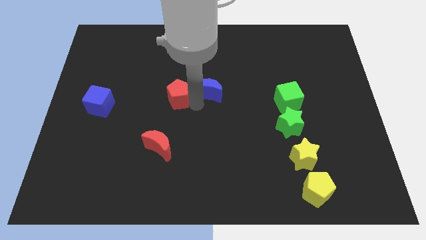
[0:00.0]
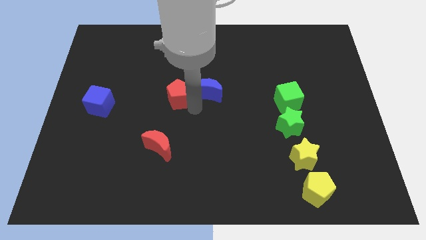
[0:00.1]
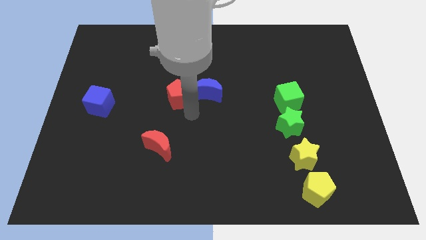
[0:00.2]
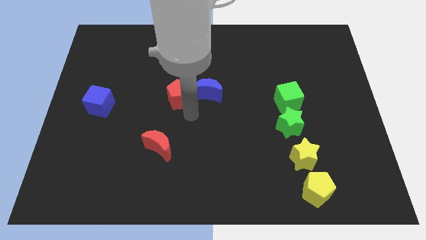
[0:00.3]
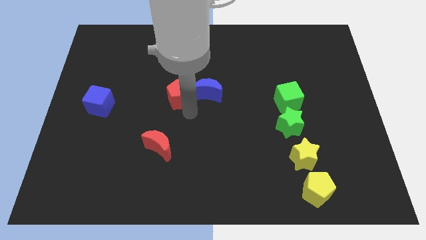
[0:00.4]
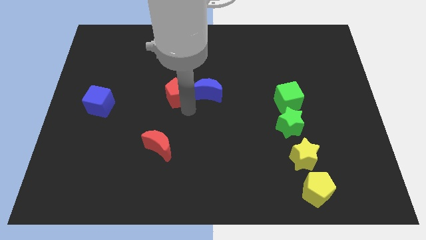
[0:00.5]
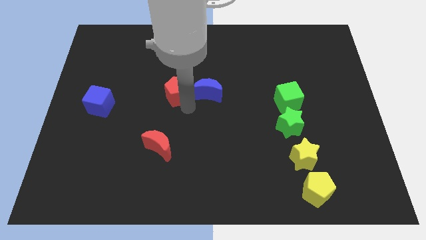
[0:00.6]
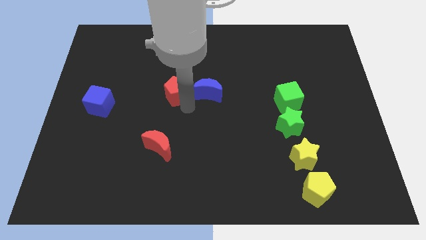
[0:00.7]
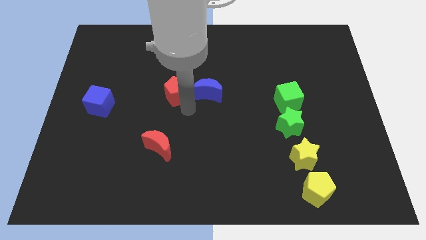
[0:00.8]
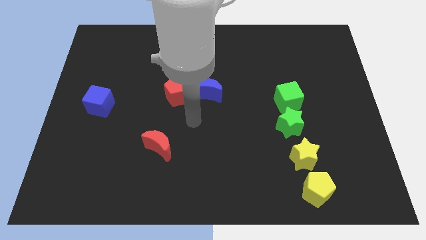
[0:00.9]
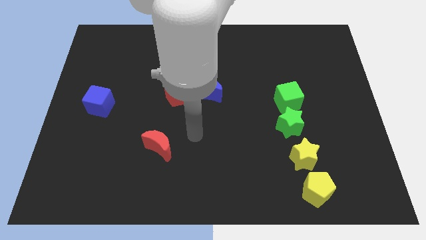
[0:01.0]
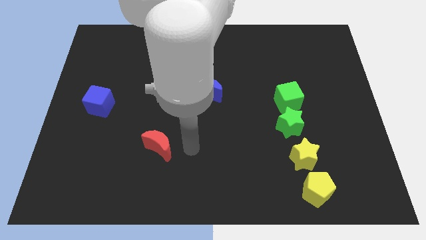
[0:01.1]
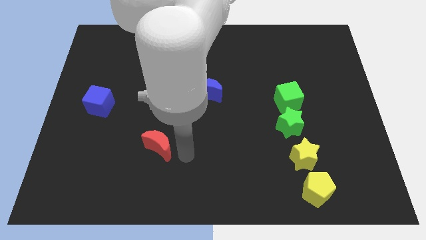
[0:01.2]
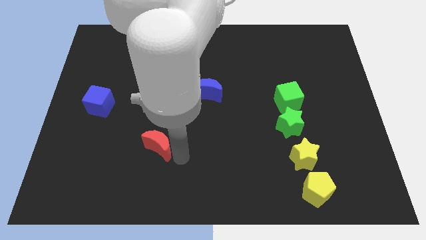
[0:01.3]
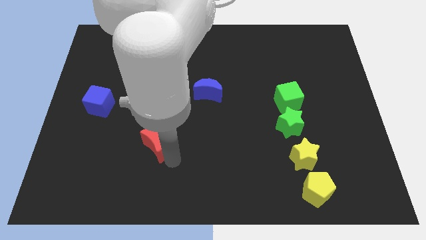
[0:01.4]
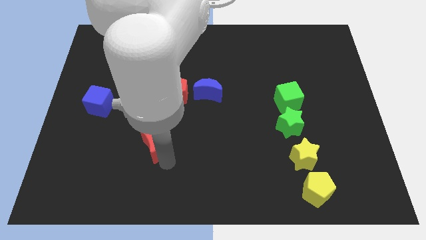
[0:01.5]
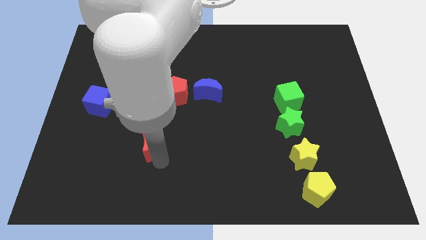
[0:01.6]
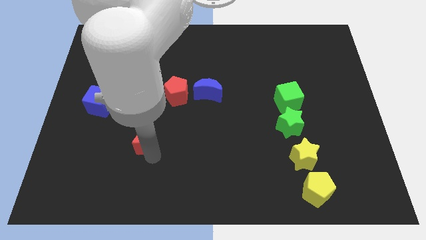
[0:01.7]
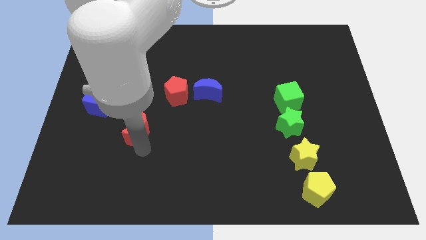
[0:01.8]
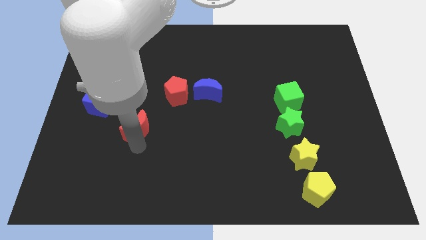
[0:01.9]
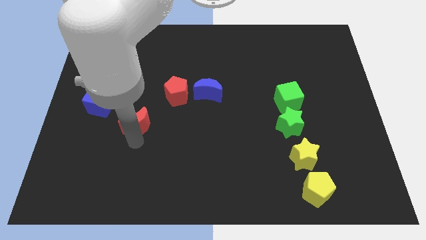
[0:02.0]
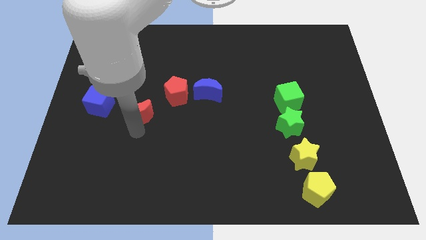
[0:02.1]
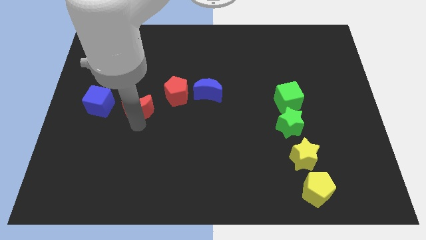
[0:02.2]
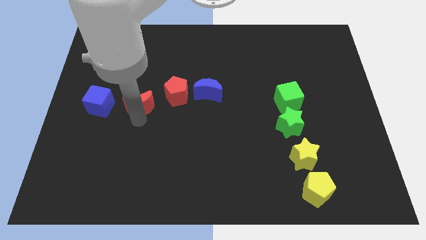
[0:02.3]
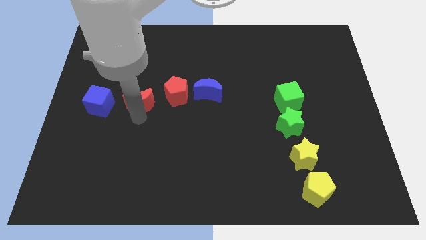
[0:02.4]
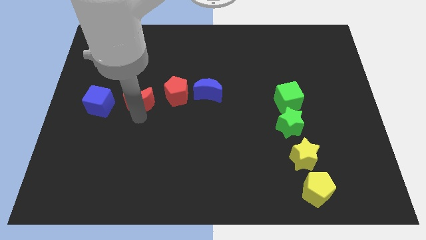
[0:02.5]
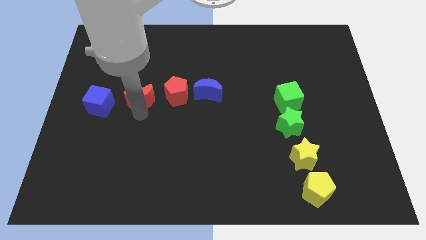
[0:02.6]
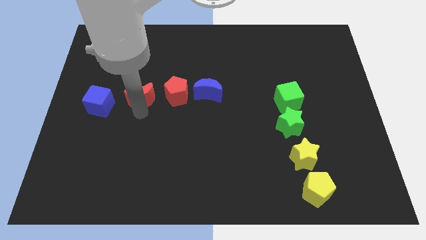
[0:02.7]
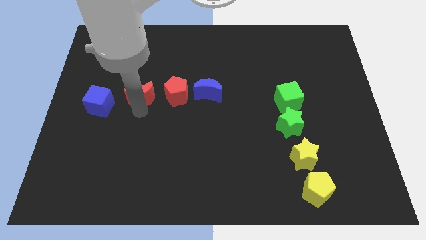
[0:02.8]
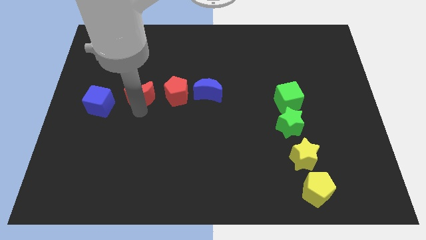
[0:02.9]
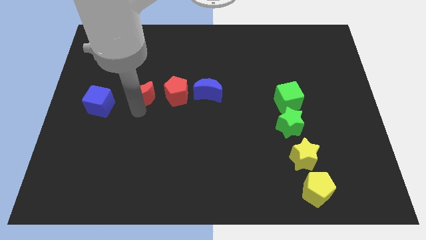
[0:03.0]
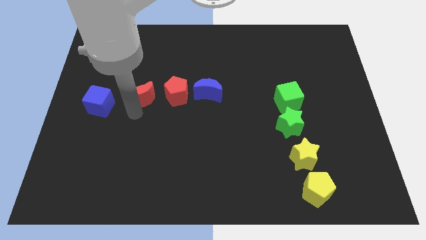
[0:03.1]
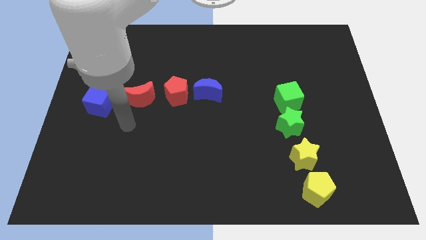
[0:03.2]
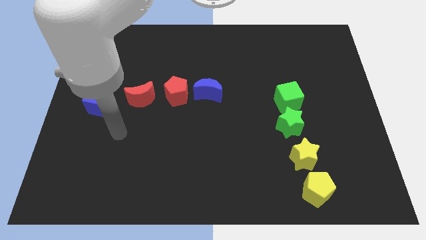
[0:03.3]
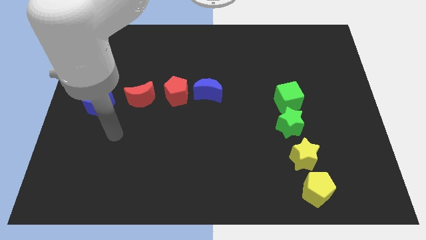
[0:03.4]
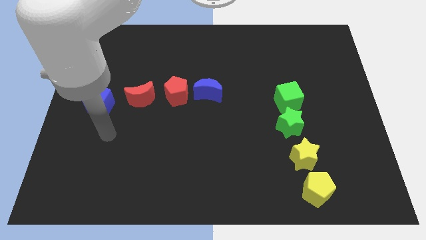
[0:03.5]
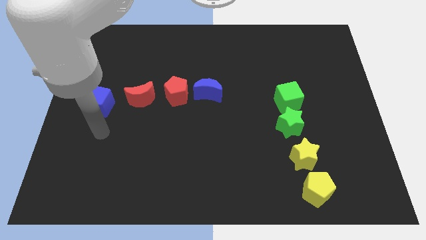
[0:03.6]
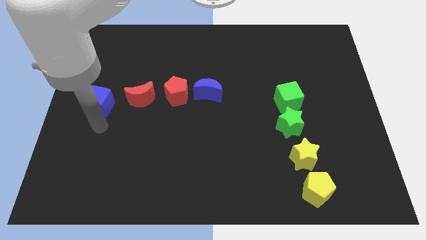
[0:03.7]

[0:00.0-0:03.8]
place the red crecent in between red pentagon and blue cube

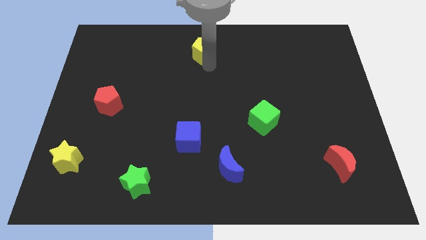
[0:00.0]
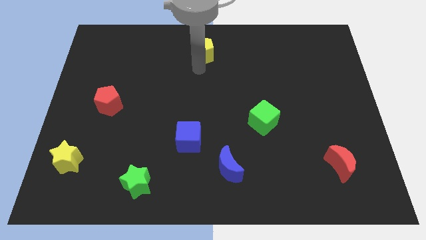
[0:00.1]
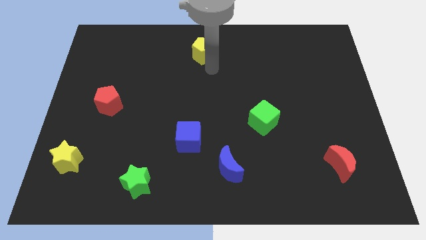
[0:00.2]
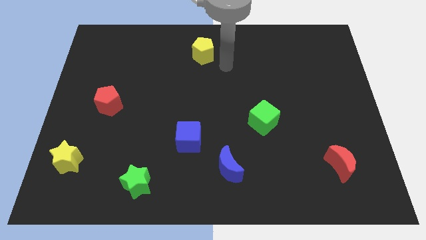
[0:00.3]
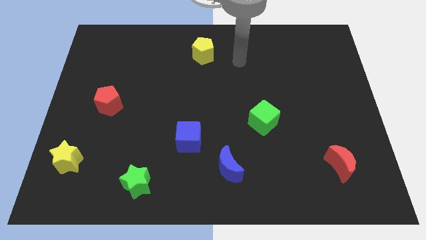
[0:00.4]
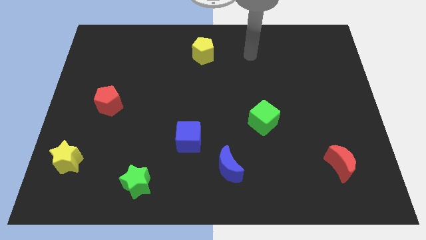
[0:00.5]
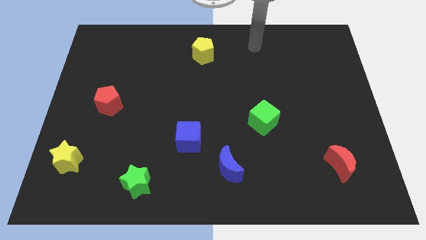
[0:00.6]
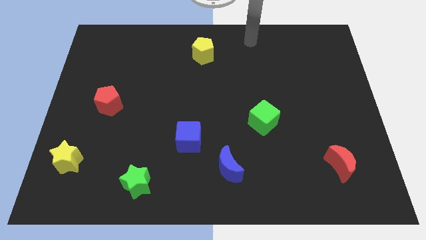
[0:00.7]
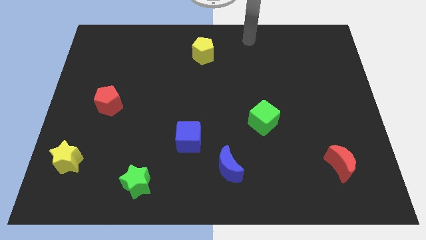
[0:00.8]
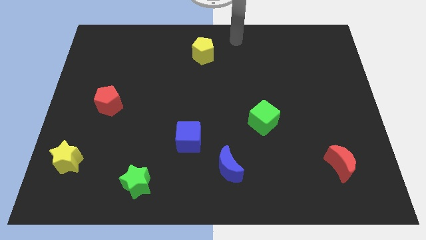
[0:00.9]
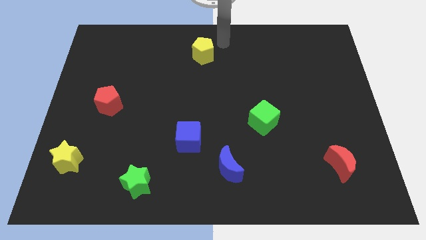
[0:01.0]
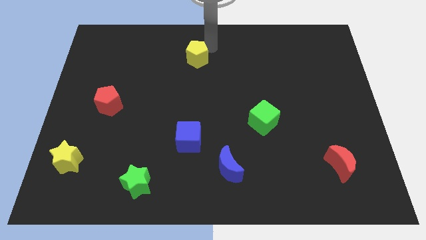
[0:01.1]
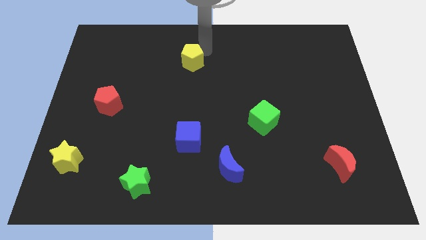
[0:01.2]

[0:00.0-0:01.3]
place the yellow pentagon vertically to the blue cube

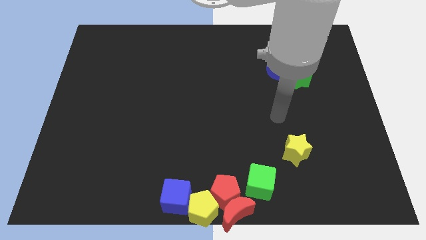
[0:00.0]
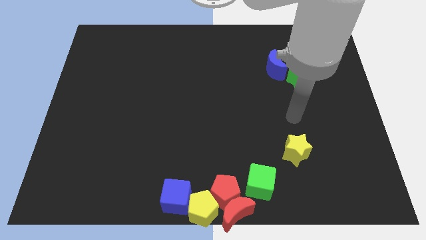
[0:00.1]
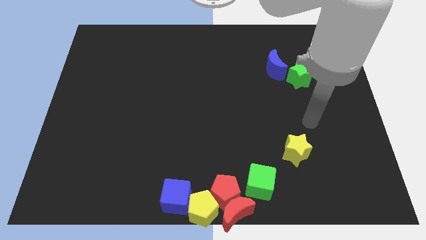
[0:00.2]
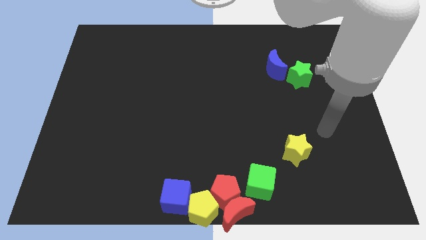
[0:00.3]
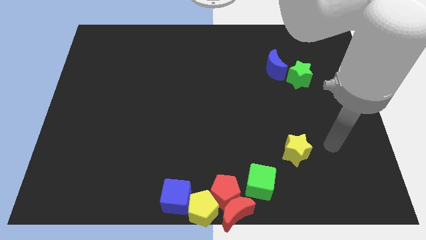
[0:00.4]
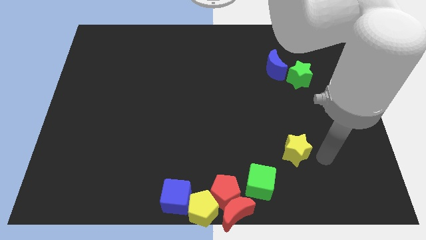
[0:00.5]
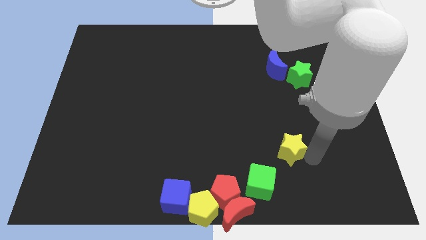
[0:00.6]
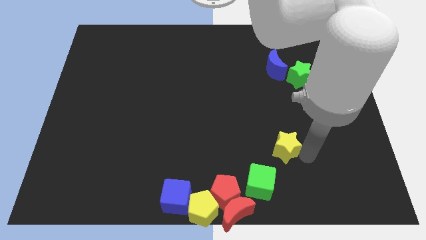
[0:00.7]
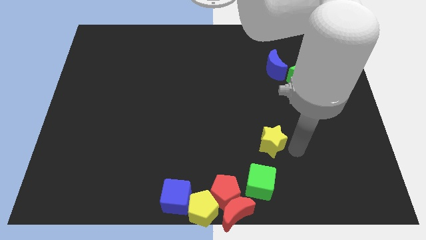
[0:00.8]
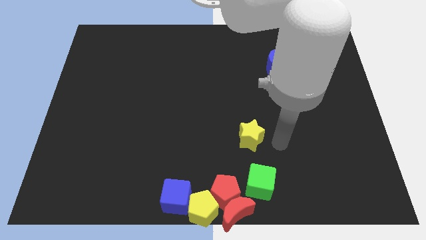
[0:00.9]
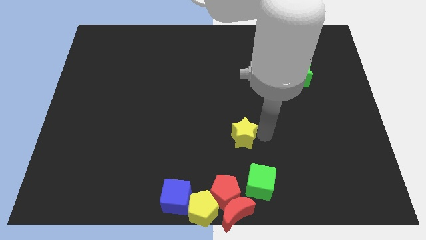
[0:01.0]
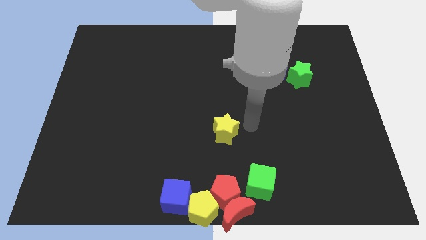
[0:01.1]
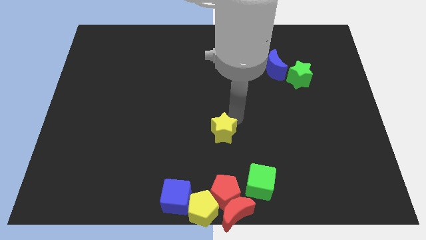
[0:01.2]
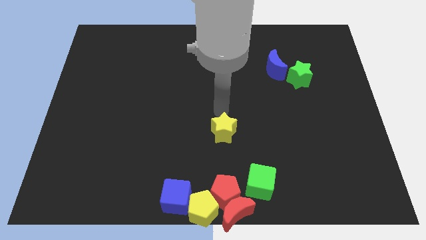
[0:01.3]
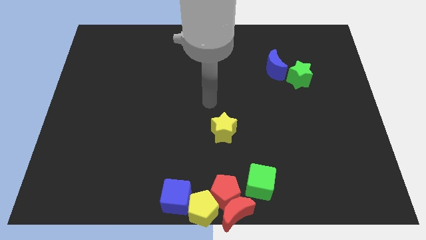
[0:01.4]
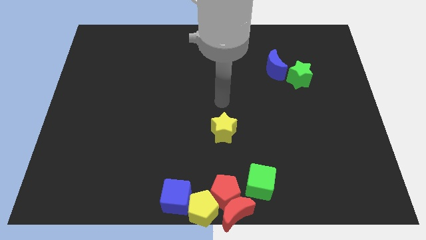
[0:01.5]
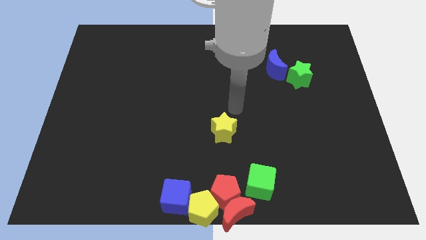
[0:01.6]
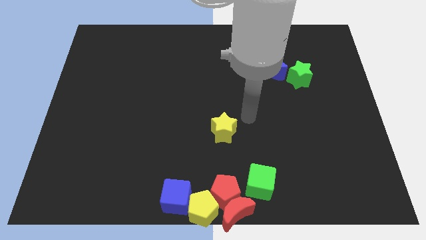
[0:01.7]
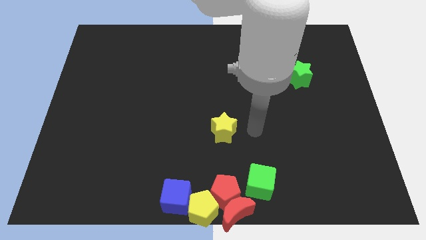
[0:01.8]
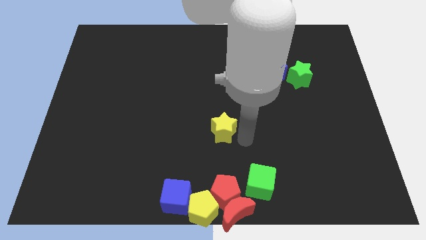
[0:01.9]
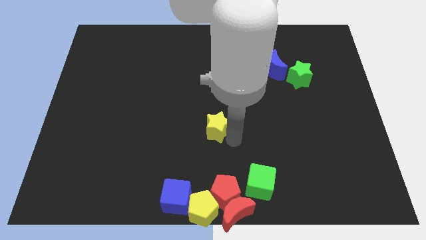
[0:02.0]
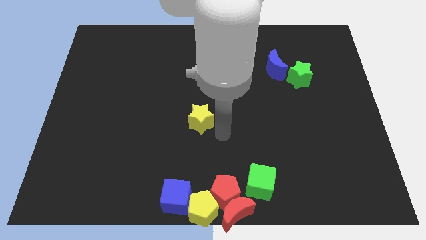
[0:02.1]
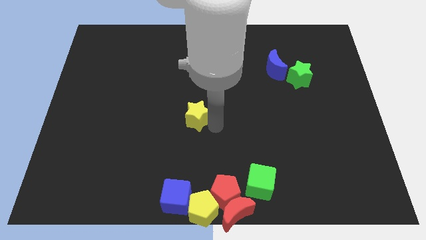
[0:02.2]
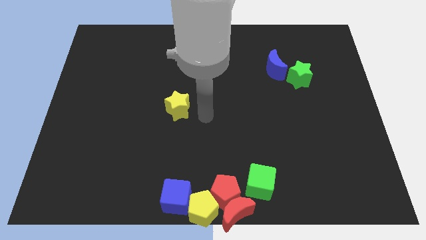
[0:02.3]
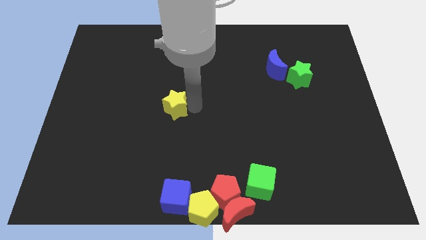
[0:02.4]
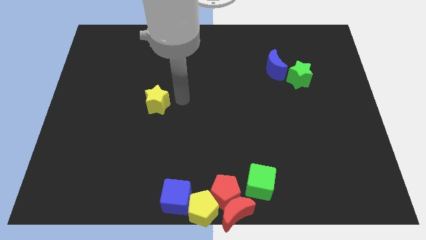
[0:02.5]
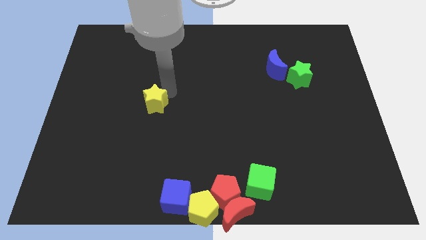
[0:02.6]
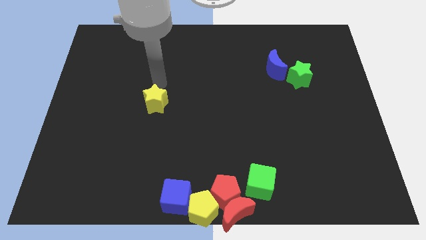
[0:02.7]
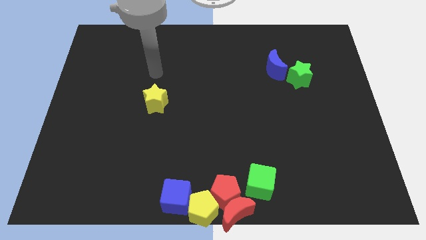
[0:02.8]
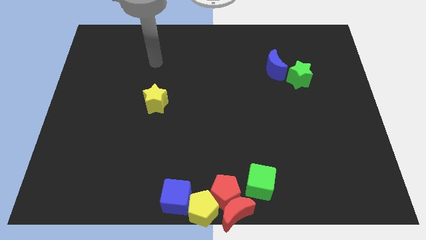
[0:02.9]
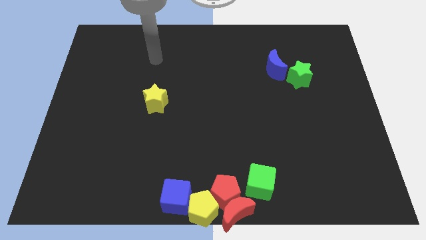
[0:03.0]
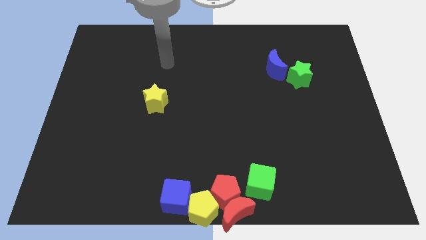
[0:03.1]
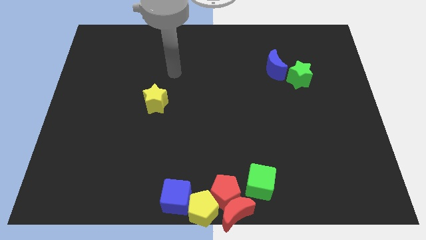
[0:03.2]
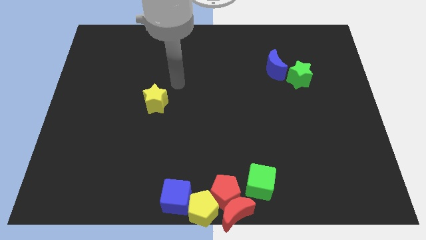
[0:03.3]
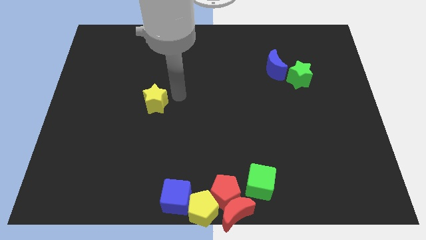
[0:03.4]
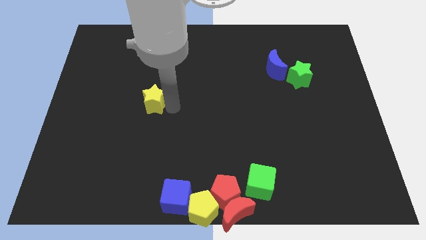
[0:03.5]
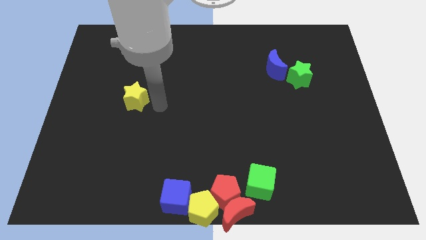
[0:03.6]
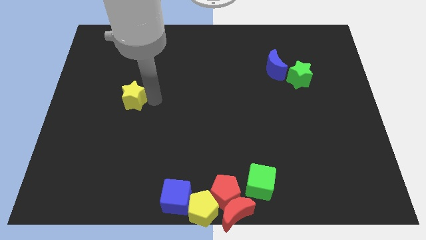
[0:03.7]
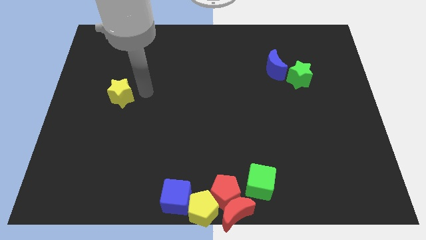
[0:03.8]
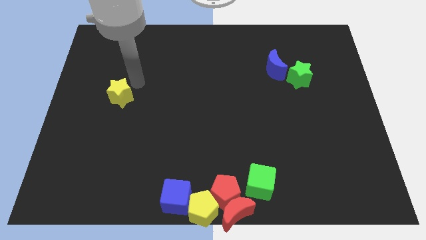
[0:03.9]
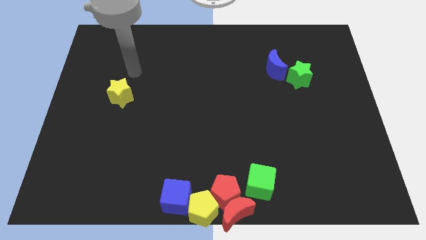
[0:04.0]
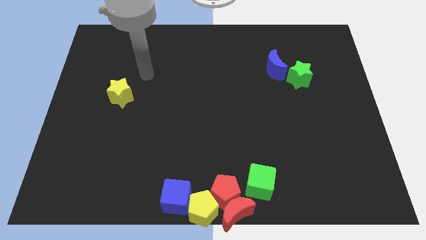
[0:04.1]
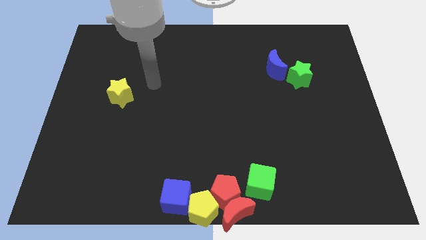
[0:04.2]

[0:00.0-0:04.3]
move the yellow star towards the left side of the board
